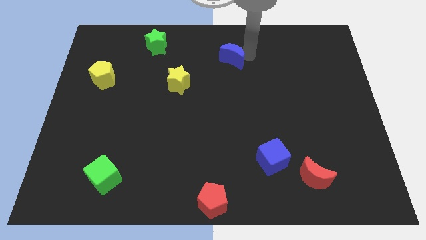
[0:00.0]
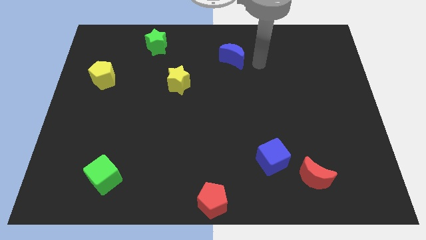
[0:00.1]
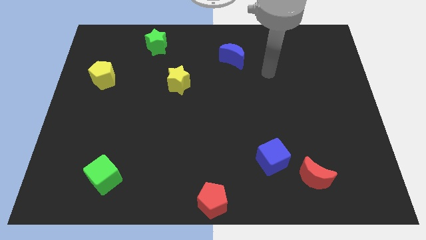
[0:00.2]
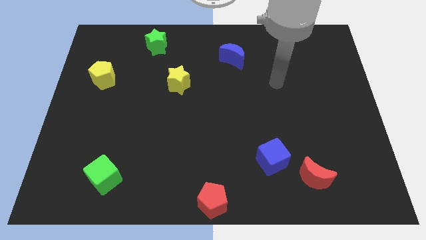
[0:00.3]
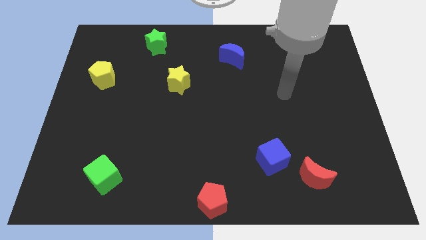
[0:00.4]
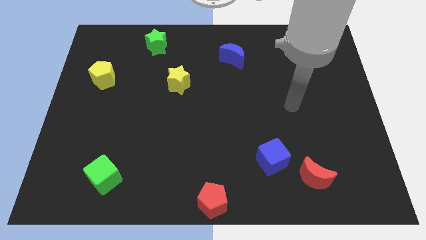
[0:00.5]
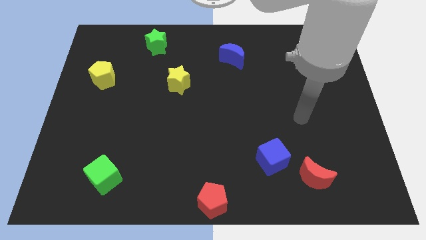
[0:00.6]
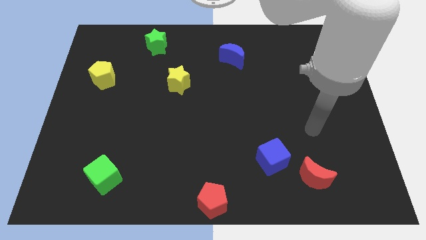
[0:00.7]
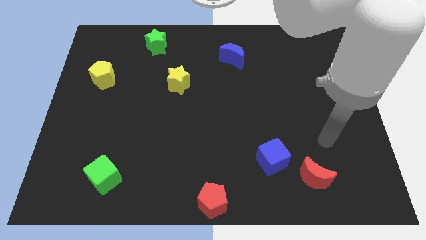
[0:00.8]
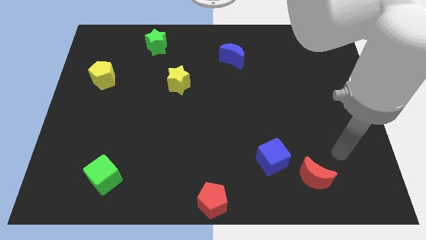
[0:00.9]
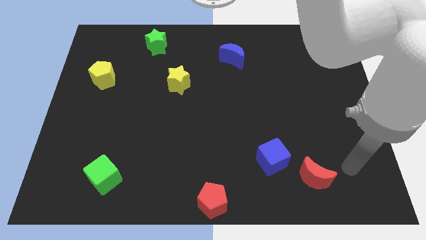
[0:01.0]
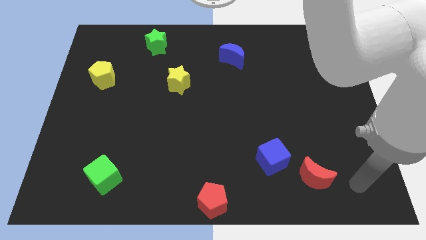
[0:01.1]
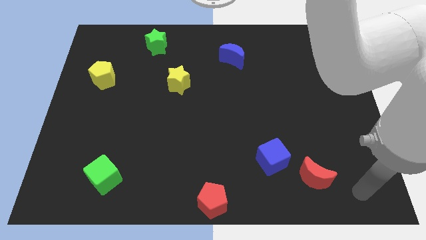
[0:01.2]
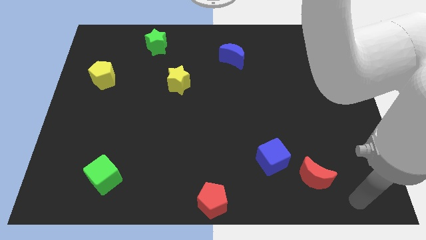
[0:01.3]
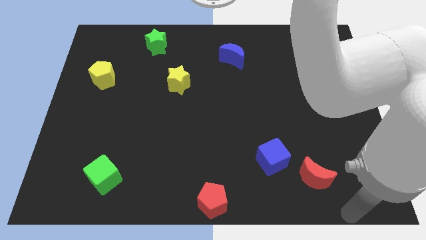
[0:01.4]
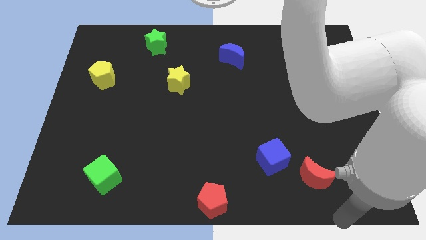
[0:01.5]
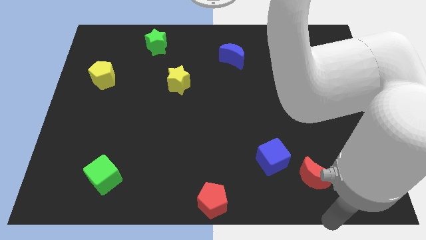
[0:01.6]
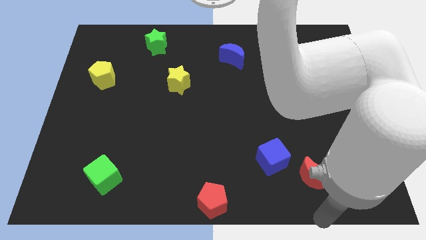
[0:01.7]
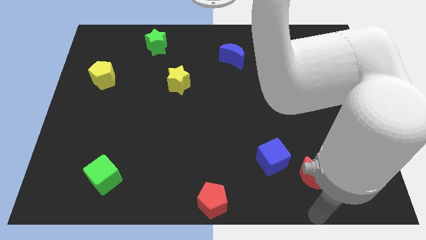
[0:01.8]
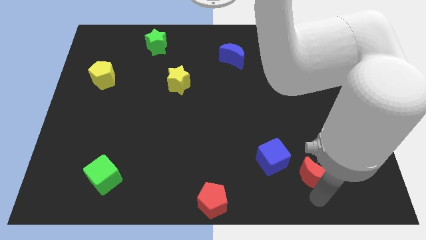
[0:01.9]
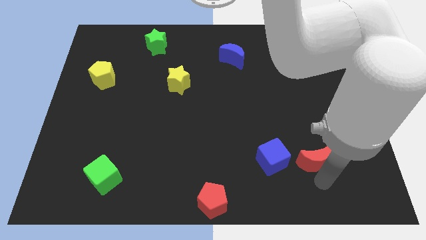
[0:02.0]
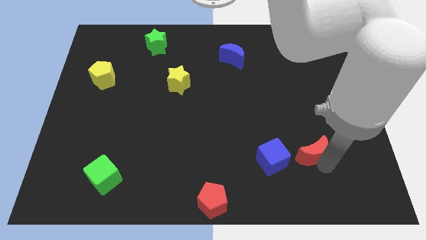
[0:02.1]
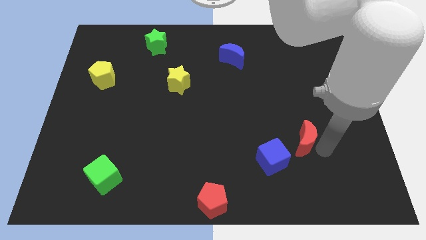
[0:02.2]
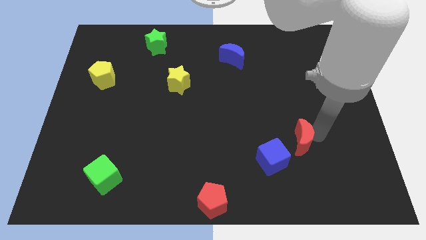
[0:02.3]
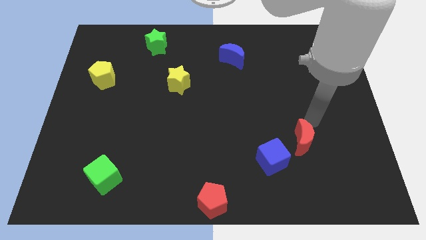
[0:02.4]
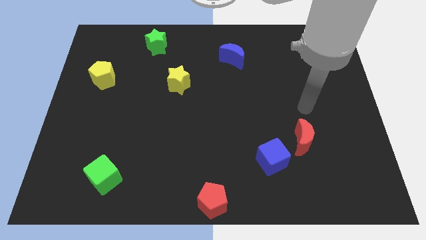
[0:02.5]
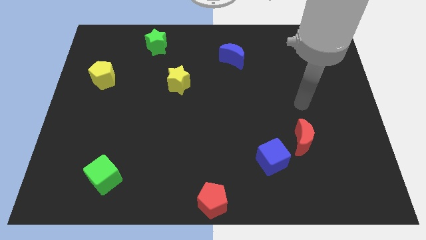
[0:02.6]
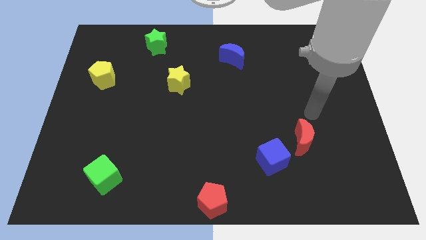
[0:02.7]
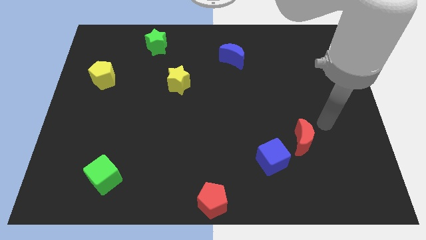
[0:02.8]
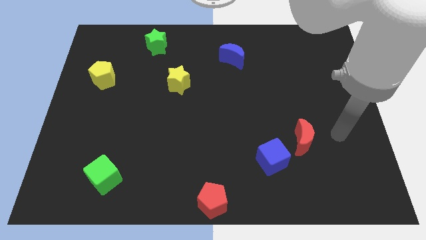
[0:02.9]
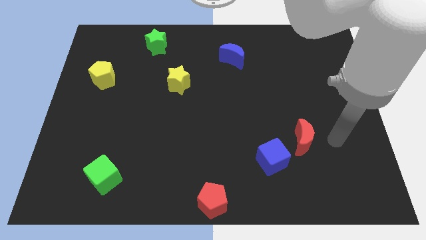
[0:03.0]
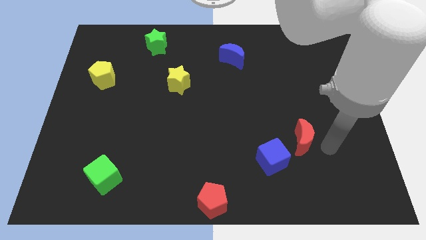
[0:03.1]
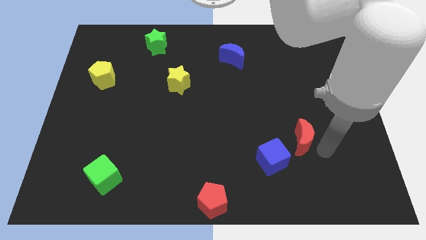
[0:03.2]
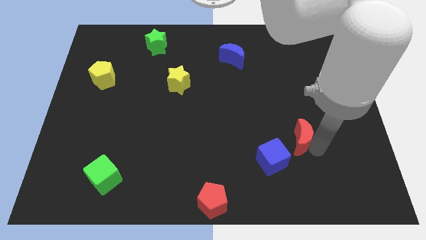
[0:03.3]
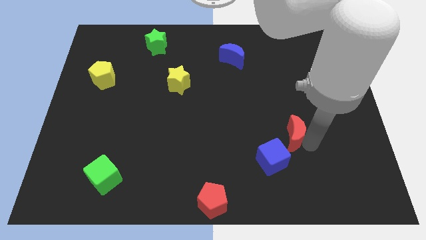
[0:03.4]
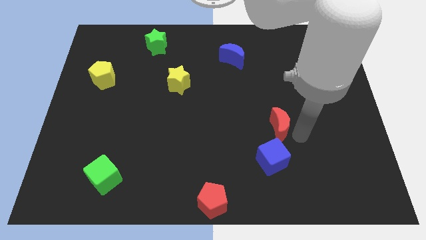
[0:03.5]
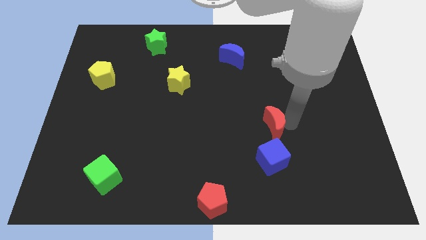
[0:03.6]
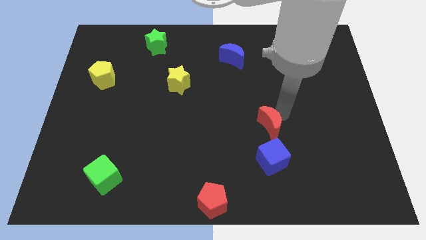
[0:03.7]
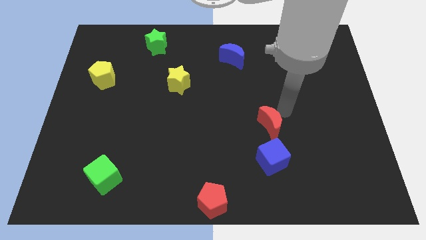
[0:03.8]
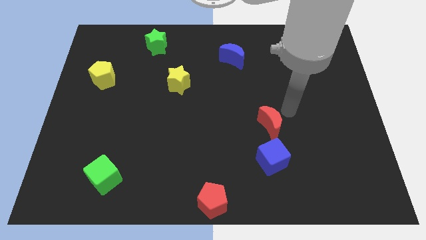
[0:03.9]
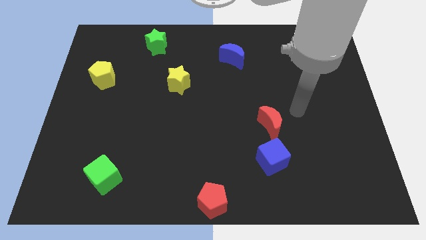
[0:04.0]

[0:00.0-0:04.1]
place the red moon at the top of blue cube

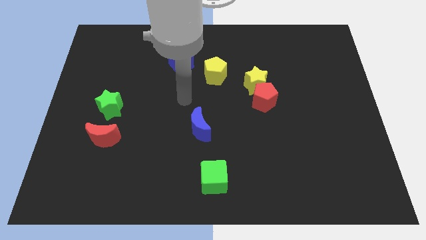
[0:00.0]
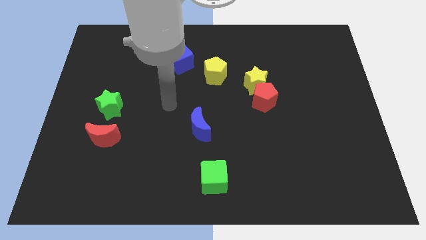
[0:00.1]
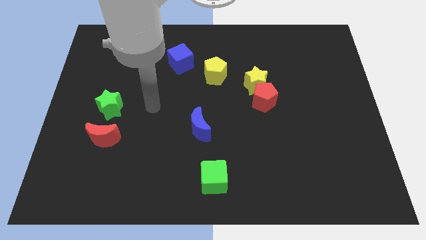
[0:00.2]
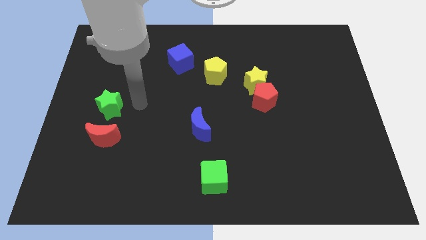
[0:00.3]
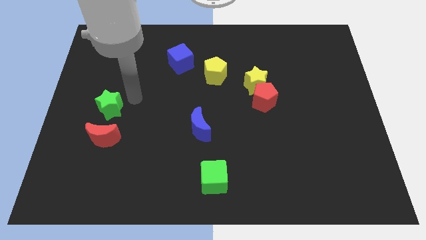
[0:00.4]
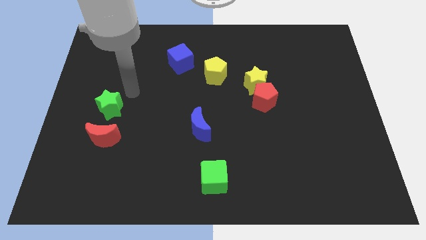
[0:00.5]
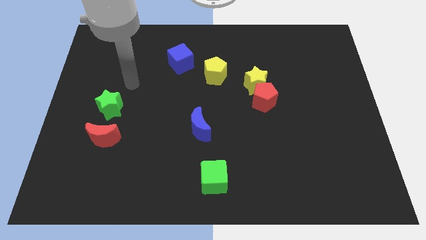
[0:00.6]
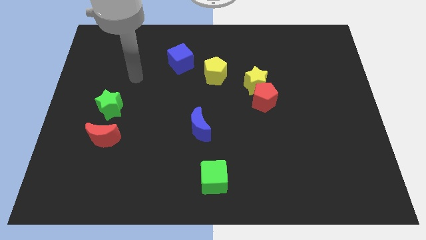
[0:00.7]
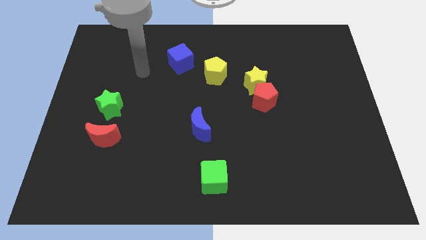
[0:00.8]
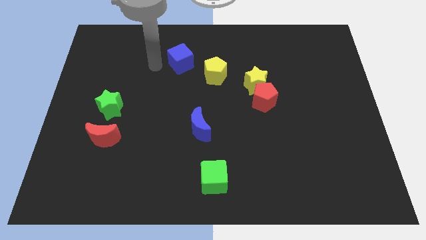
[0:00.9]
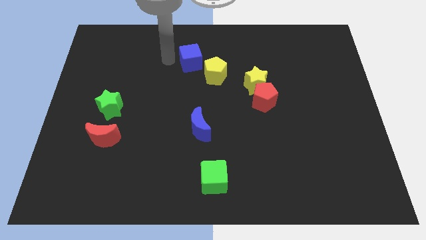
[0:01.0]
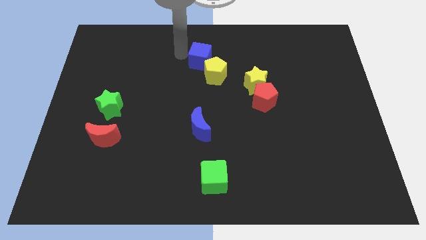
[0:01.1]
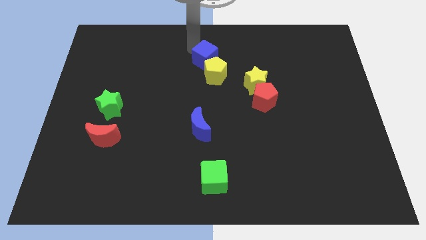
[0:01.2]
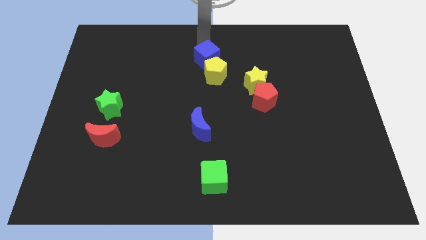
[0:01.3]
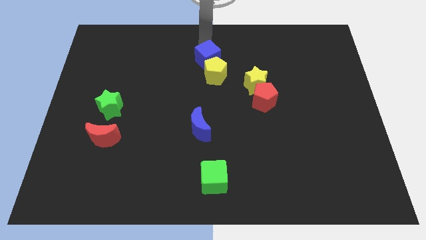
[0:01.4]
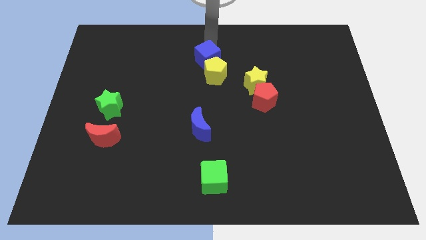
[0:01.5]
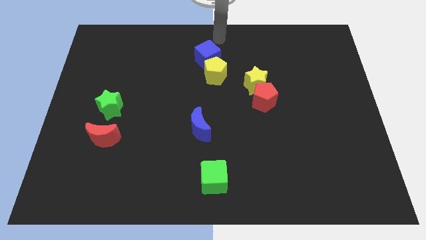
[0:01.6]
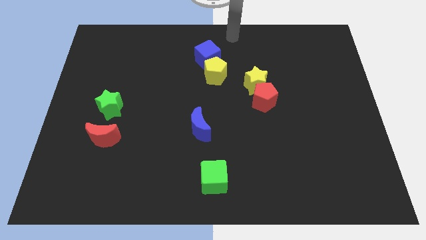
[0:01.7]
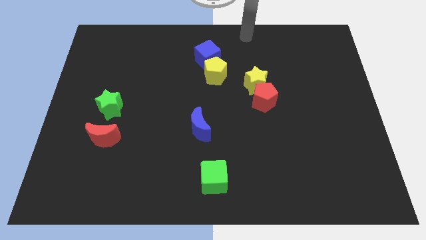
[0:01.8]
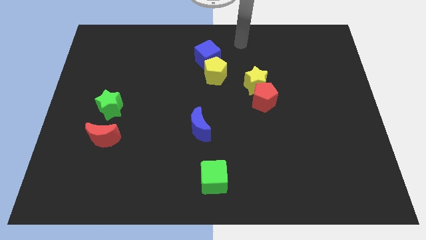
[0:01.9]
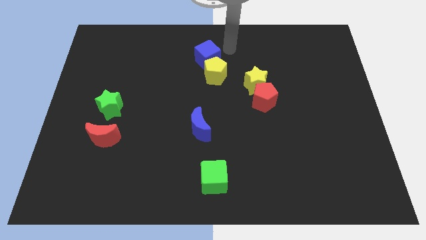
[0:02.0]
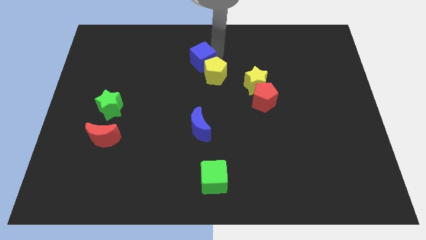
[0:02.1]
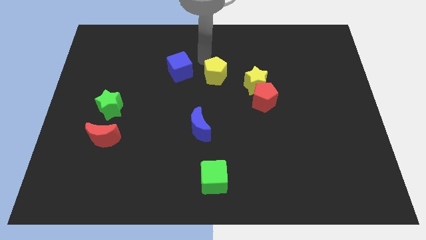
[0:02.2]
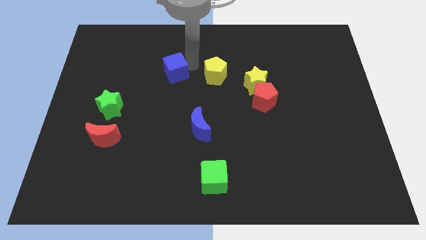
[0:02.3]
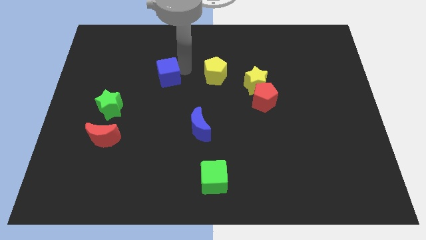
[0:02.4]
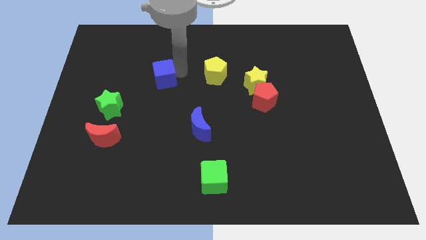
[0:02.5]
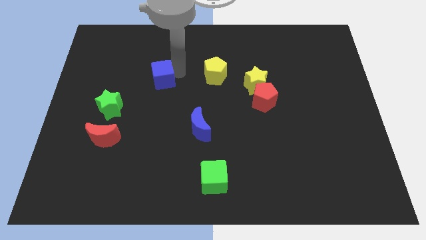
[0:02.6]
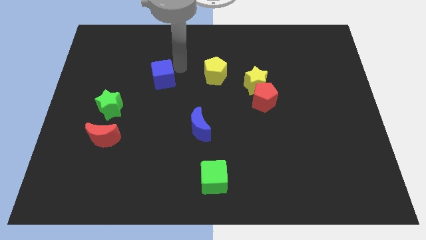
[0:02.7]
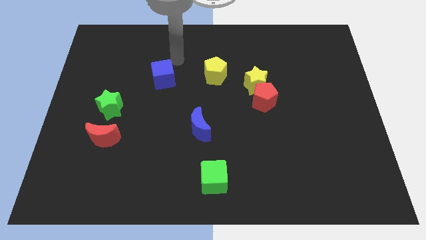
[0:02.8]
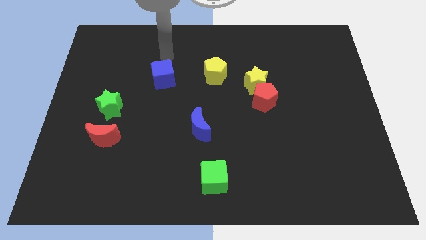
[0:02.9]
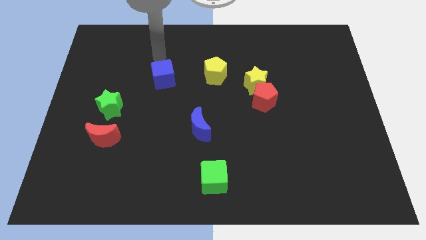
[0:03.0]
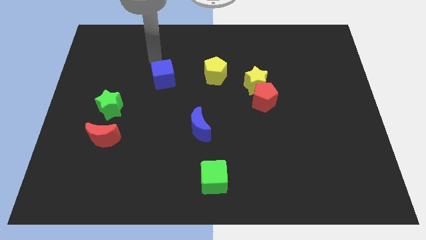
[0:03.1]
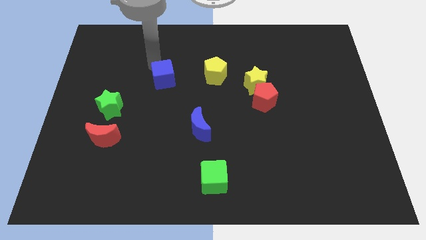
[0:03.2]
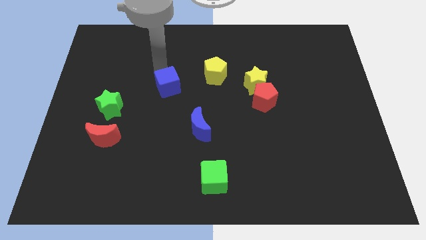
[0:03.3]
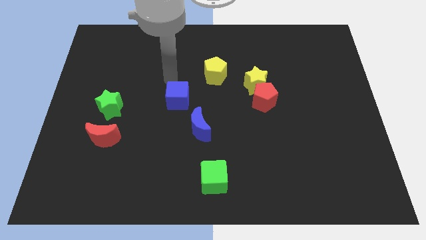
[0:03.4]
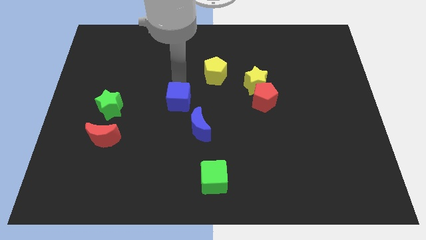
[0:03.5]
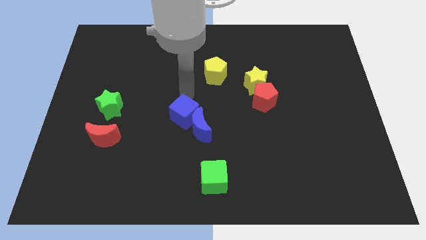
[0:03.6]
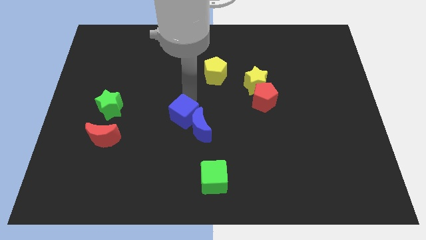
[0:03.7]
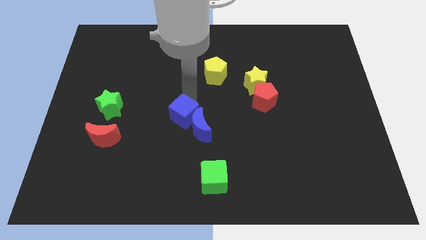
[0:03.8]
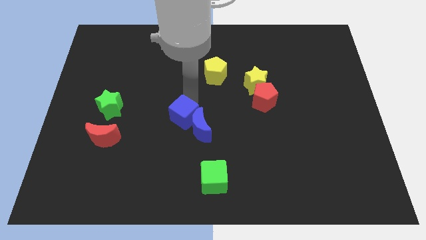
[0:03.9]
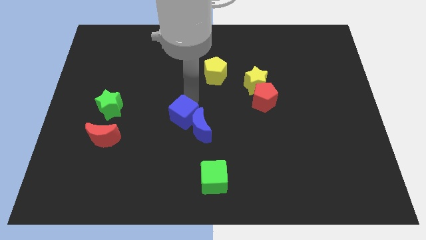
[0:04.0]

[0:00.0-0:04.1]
drag the blue cube into the top left side of the blue crescent

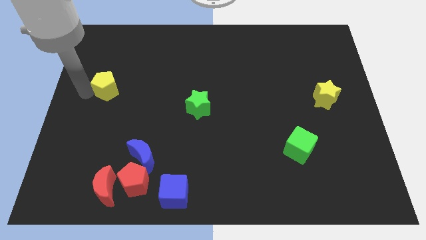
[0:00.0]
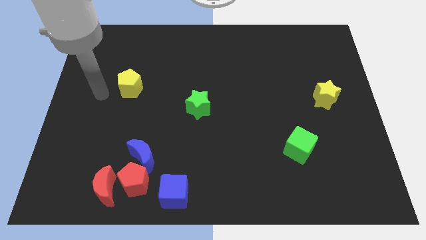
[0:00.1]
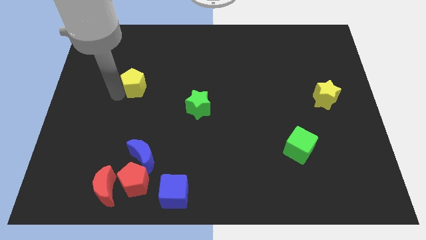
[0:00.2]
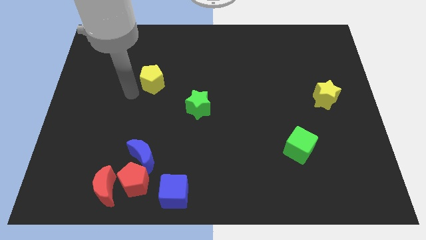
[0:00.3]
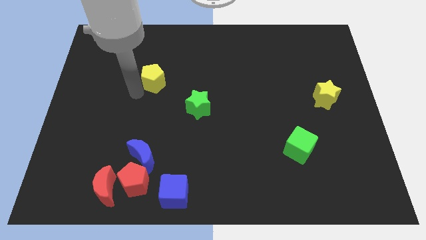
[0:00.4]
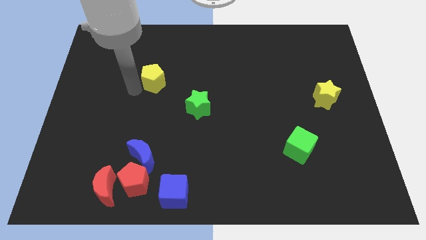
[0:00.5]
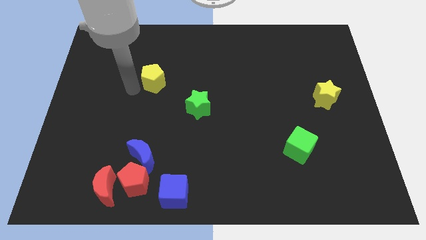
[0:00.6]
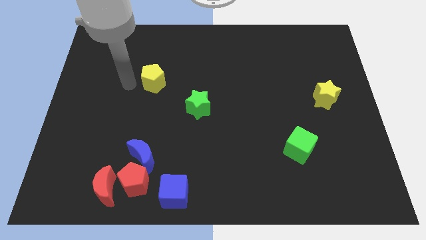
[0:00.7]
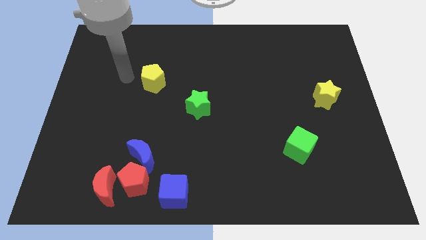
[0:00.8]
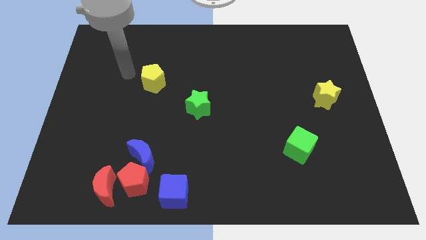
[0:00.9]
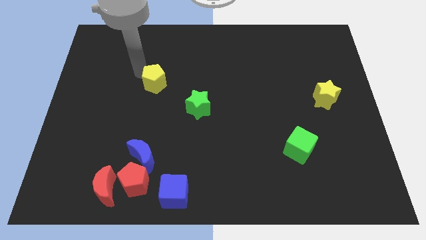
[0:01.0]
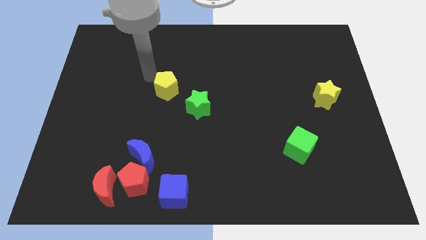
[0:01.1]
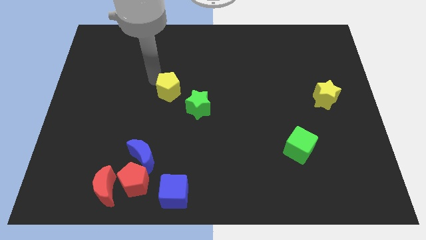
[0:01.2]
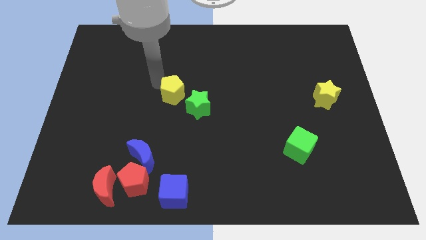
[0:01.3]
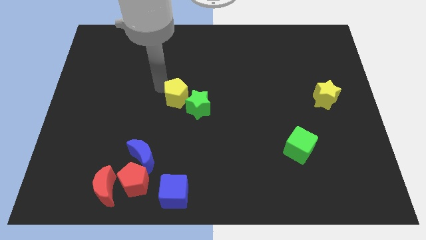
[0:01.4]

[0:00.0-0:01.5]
move the yellow pentagon to the top left of the green star
